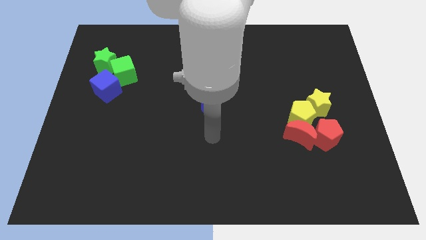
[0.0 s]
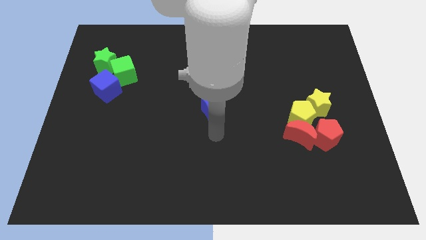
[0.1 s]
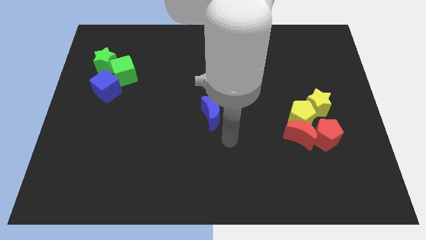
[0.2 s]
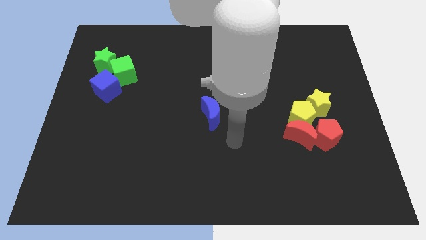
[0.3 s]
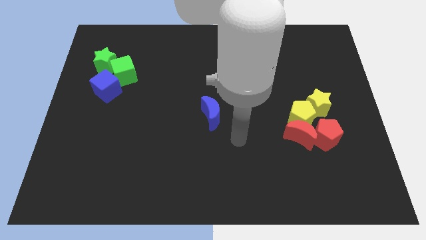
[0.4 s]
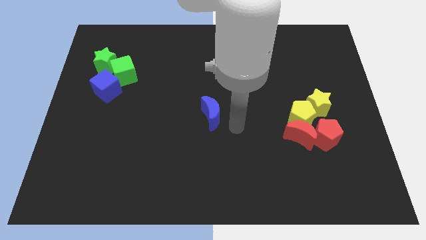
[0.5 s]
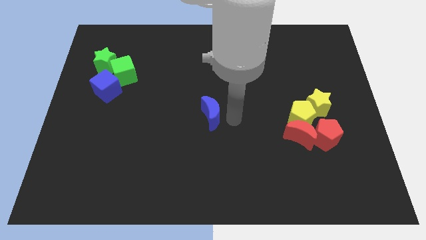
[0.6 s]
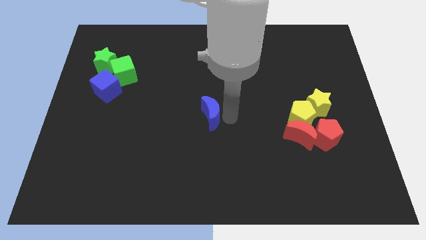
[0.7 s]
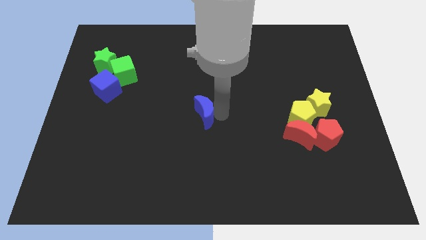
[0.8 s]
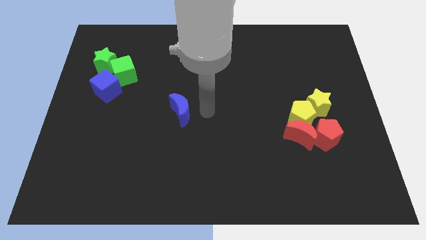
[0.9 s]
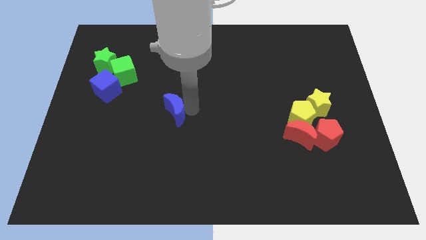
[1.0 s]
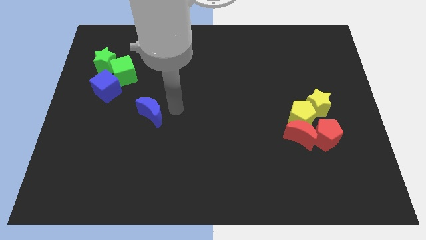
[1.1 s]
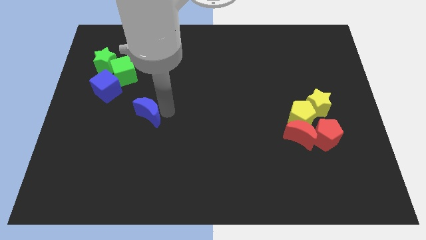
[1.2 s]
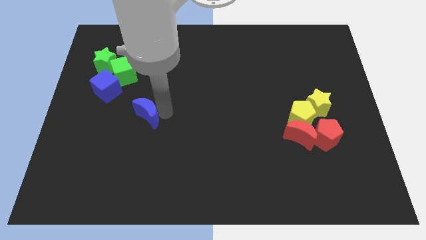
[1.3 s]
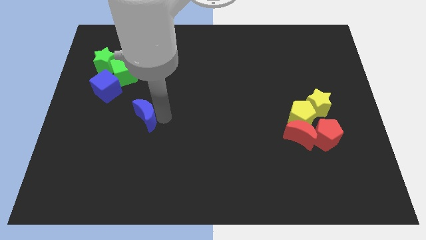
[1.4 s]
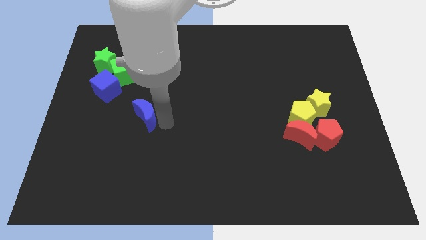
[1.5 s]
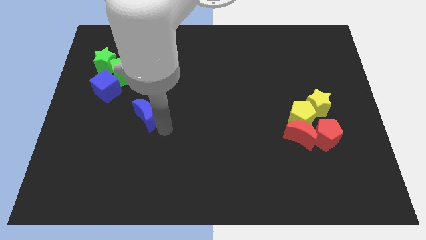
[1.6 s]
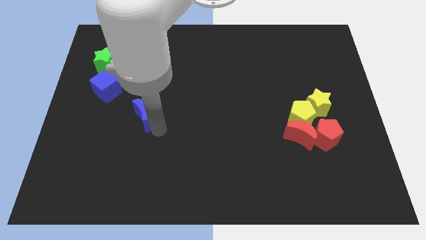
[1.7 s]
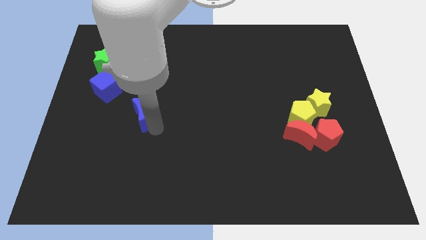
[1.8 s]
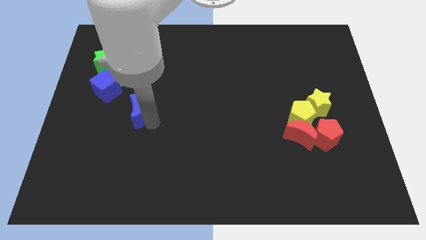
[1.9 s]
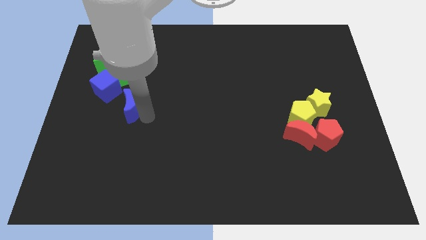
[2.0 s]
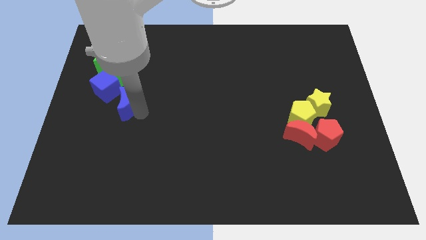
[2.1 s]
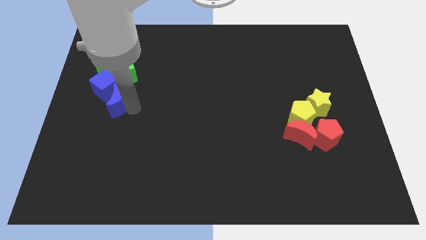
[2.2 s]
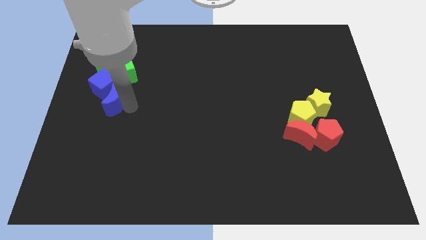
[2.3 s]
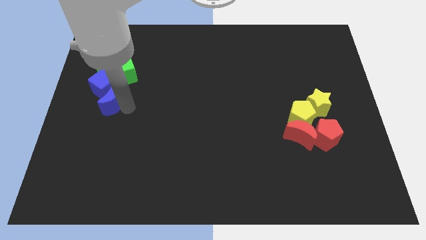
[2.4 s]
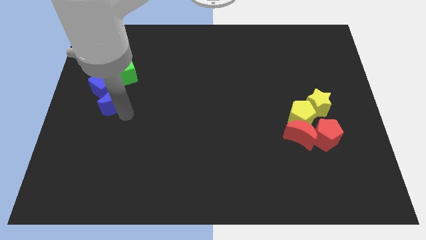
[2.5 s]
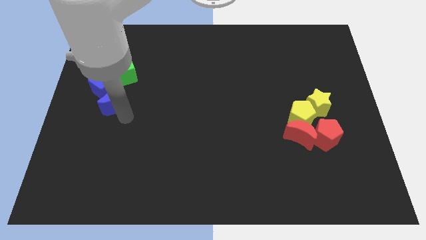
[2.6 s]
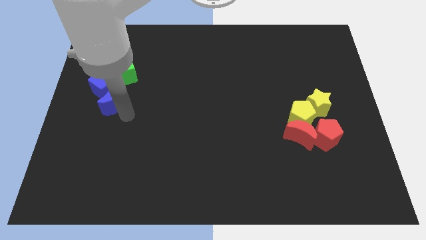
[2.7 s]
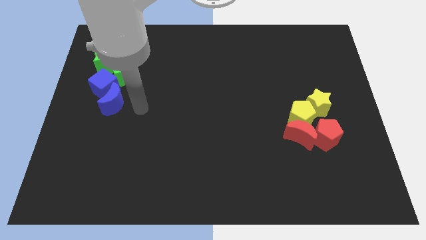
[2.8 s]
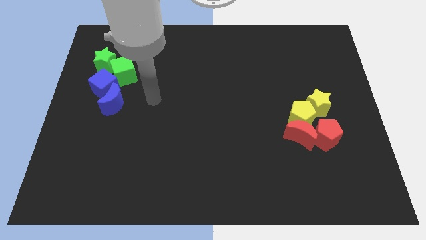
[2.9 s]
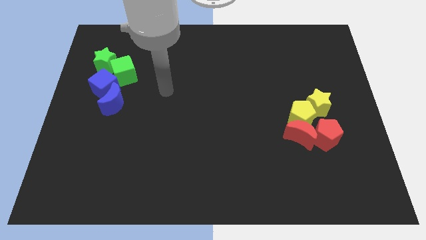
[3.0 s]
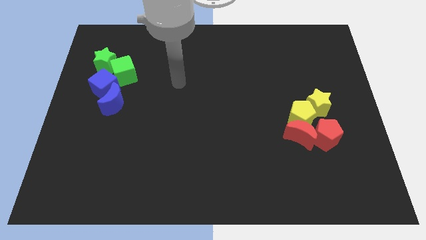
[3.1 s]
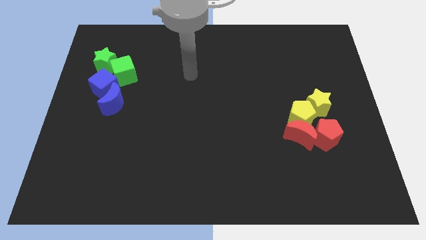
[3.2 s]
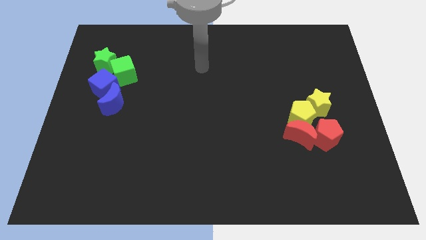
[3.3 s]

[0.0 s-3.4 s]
move the blue moon into the blue cube

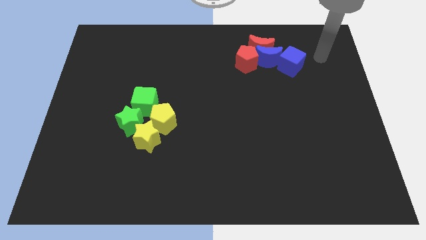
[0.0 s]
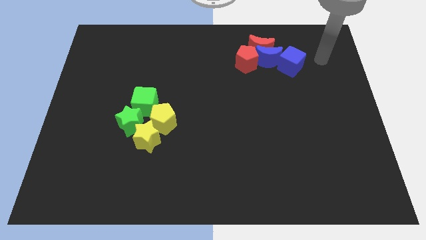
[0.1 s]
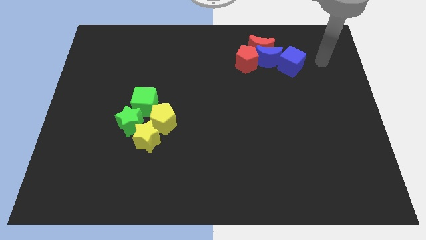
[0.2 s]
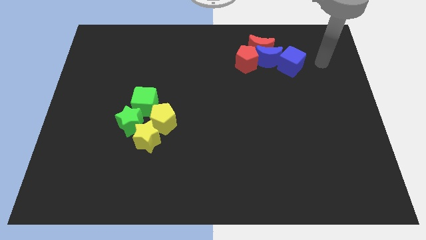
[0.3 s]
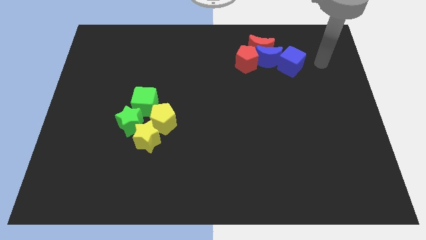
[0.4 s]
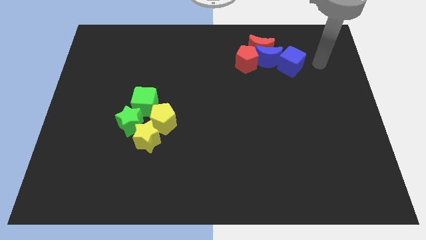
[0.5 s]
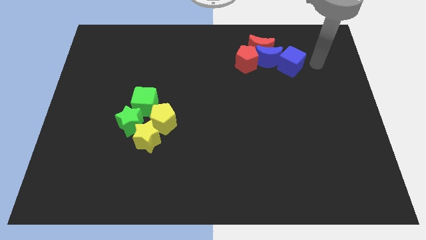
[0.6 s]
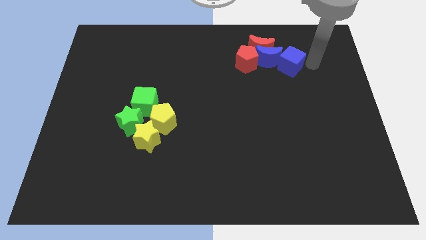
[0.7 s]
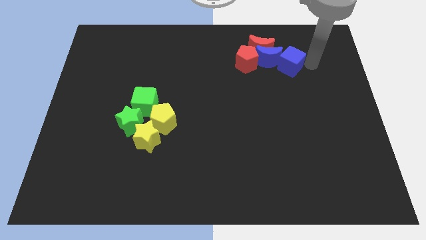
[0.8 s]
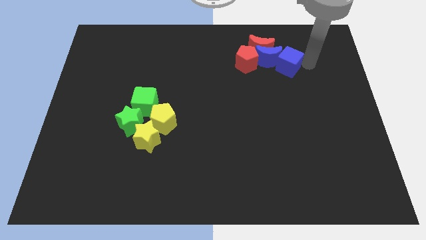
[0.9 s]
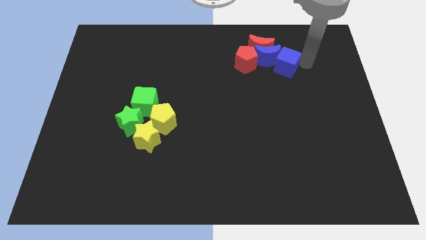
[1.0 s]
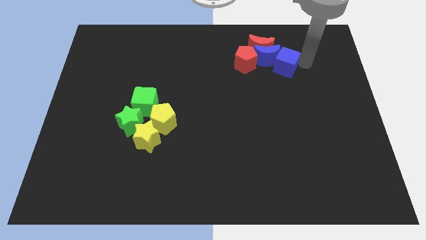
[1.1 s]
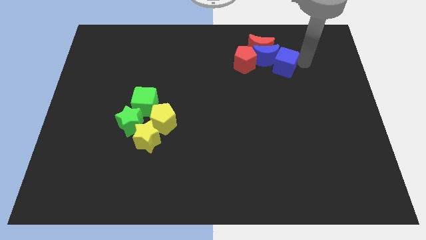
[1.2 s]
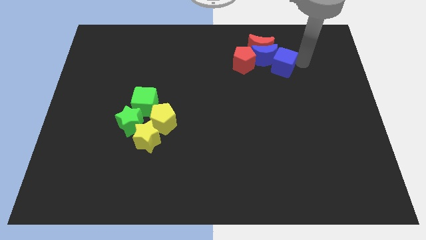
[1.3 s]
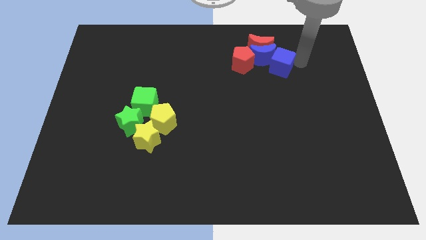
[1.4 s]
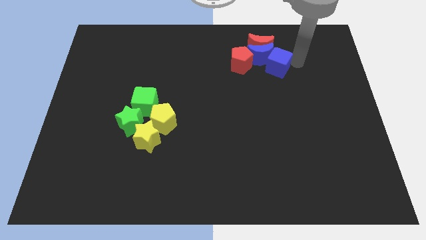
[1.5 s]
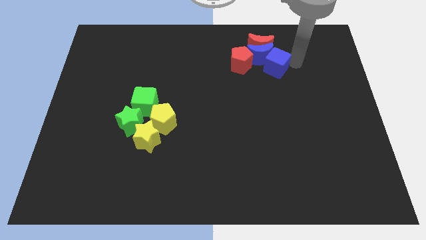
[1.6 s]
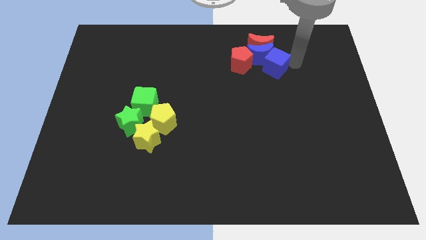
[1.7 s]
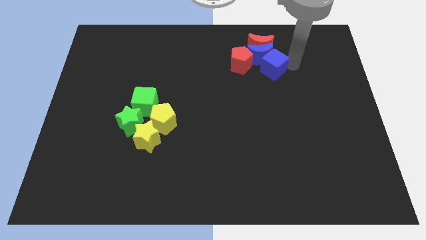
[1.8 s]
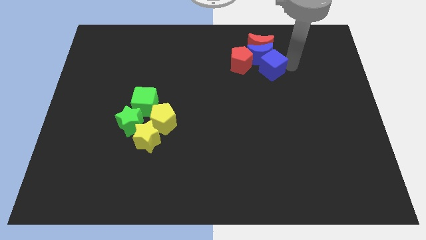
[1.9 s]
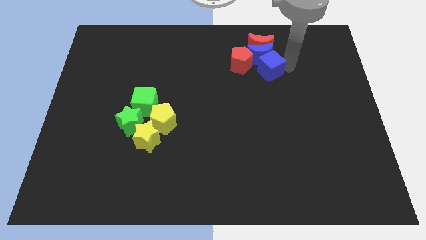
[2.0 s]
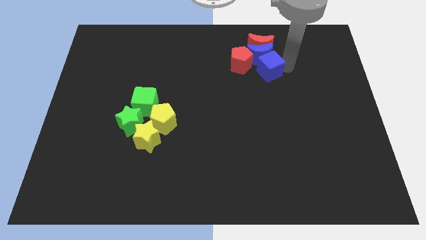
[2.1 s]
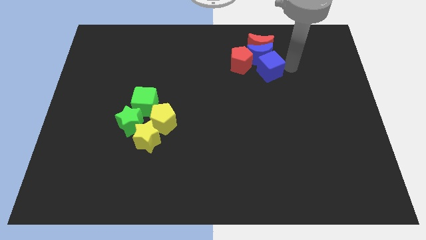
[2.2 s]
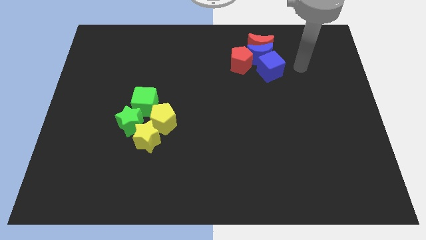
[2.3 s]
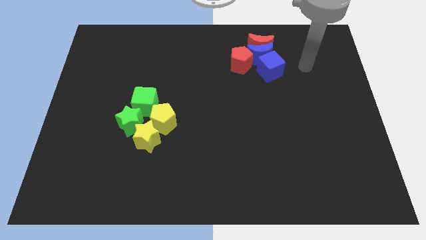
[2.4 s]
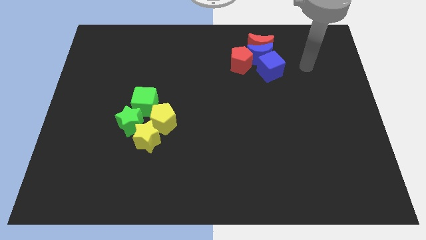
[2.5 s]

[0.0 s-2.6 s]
move the blue cube into the blue moon

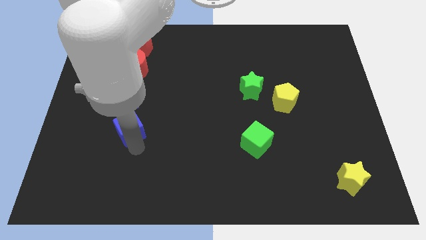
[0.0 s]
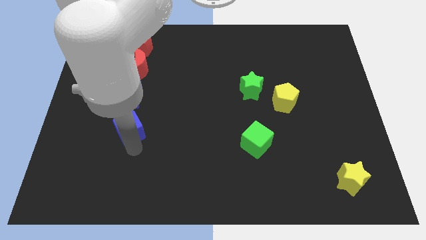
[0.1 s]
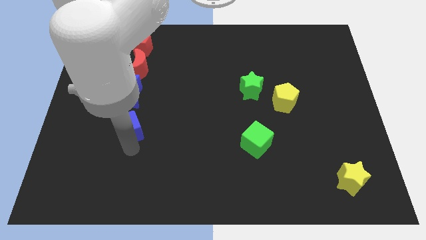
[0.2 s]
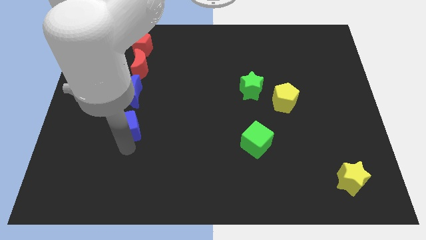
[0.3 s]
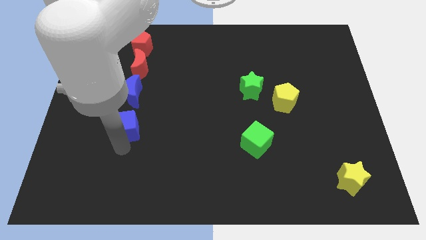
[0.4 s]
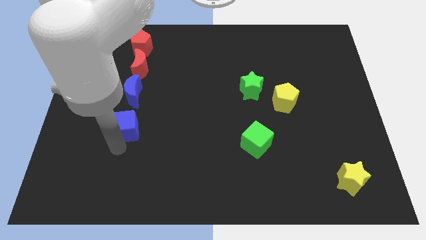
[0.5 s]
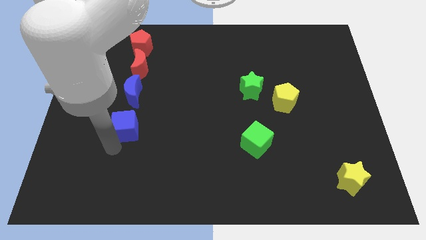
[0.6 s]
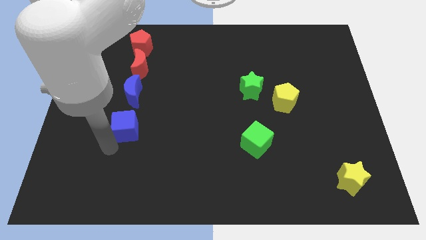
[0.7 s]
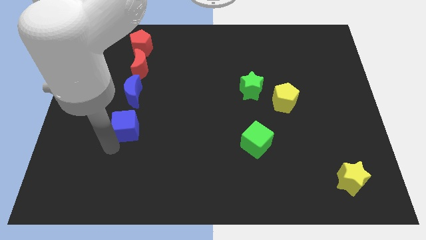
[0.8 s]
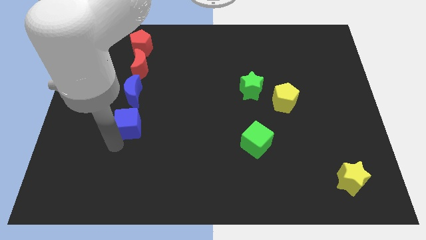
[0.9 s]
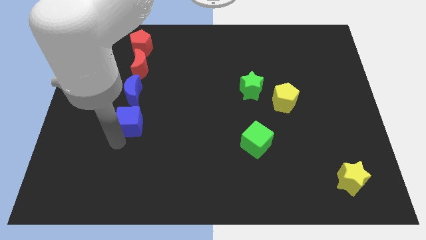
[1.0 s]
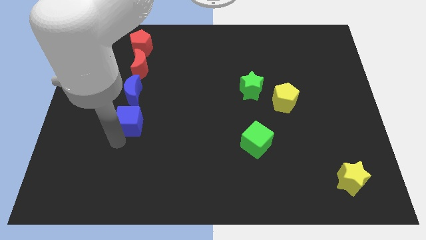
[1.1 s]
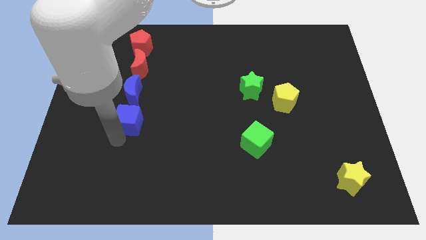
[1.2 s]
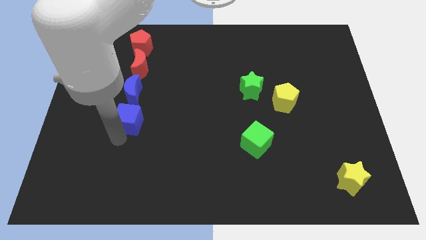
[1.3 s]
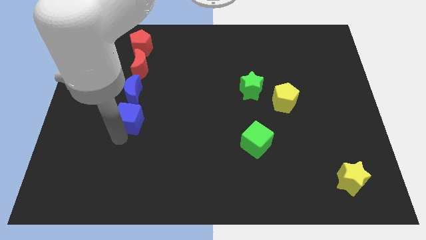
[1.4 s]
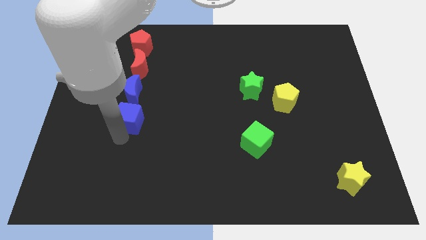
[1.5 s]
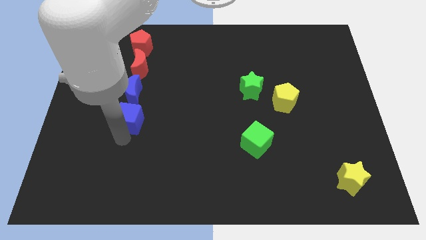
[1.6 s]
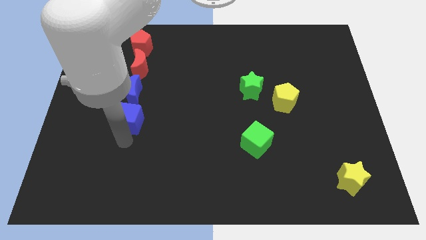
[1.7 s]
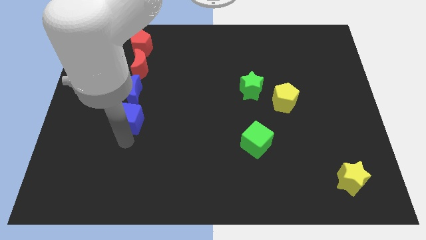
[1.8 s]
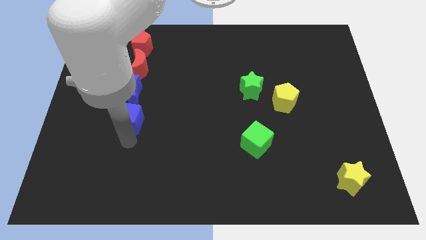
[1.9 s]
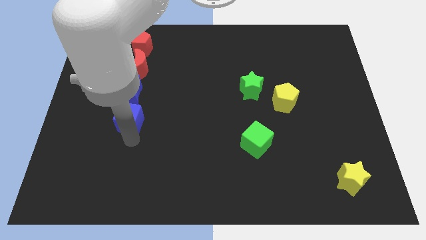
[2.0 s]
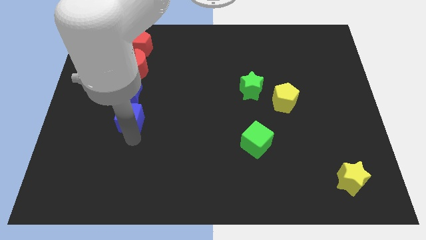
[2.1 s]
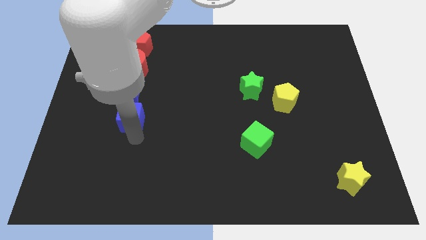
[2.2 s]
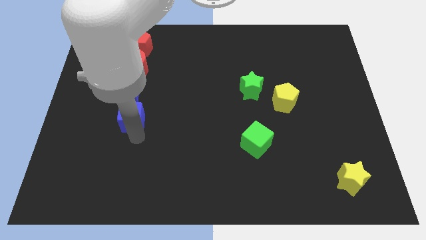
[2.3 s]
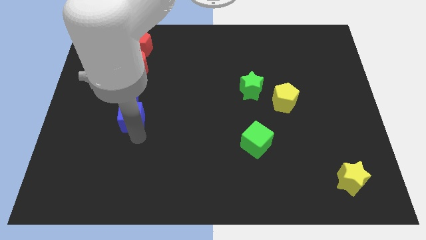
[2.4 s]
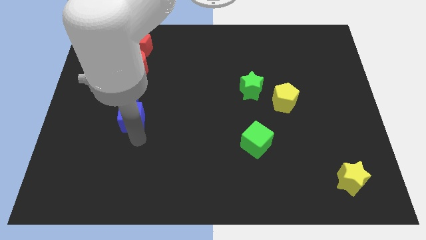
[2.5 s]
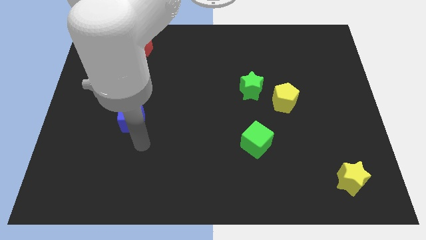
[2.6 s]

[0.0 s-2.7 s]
place blue cube below blue moon

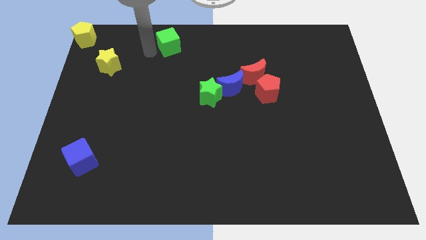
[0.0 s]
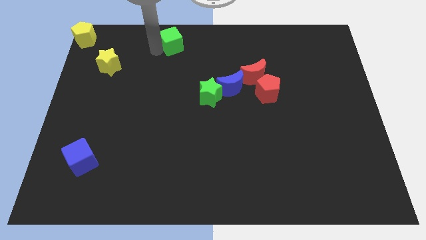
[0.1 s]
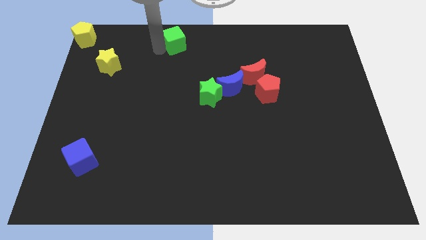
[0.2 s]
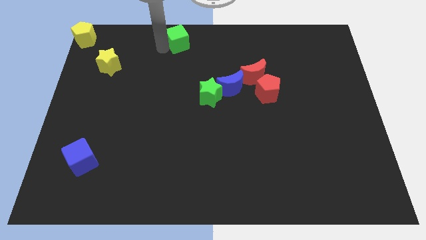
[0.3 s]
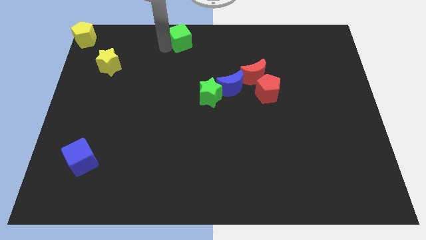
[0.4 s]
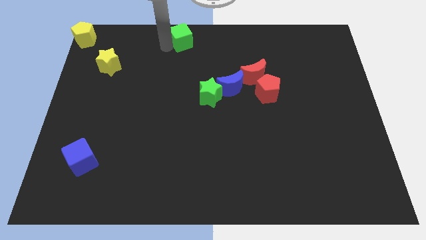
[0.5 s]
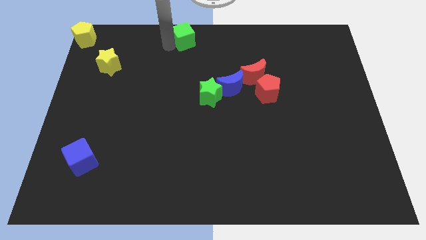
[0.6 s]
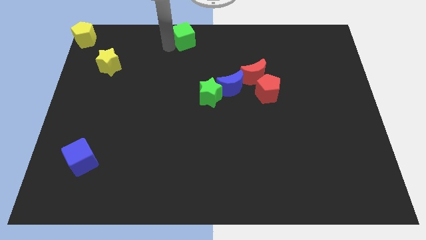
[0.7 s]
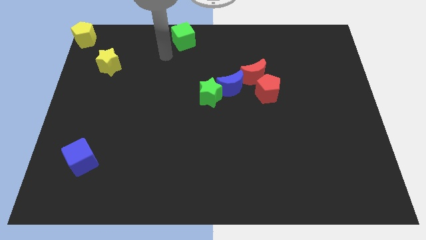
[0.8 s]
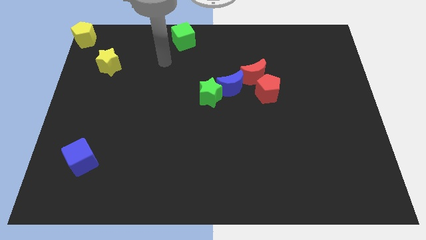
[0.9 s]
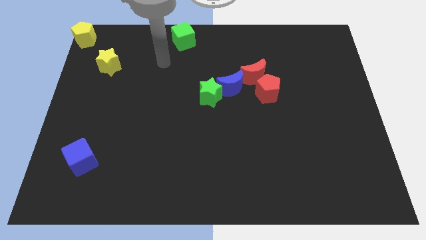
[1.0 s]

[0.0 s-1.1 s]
move green cube slightly right
